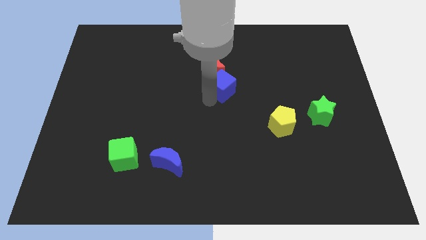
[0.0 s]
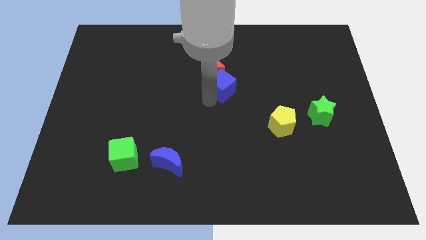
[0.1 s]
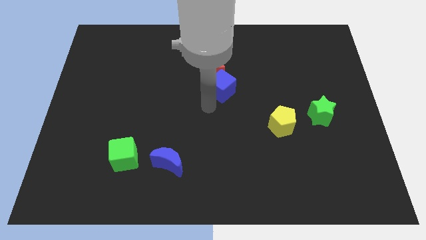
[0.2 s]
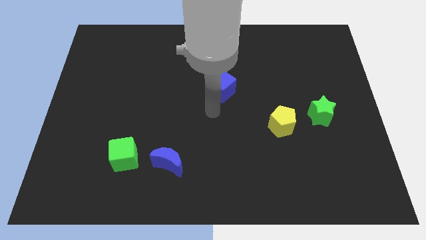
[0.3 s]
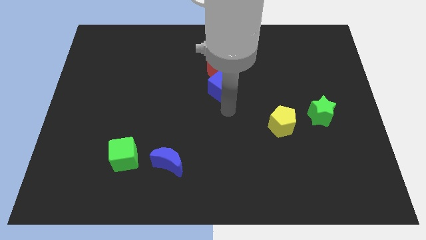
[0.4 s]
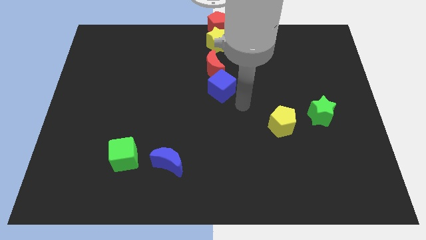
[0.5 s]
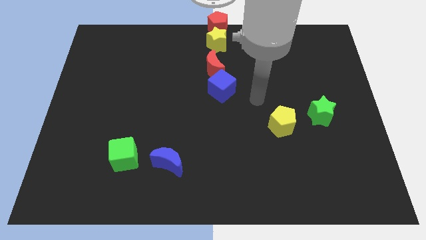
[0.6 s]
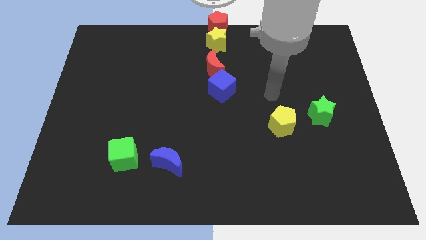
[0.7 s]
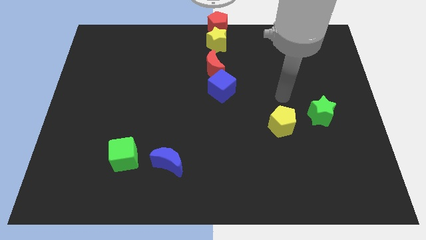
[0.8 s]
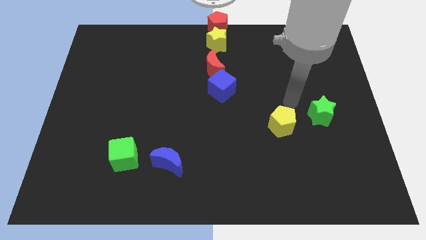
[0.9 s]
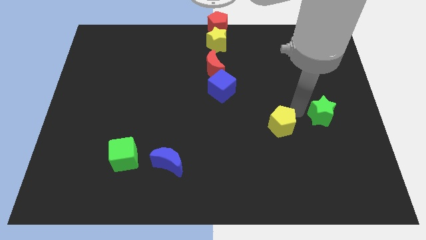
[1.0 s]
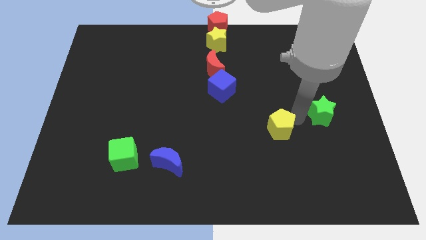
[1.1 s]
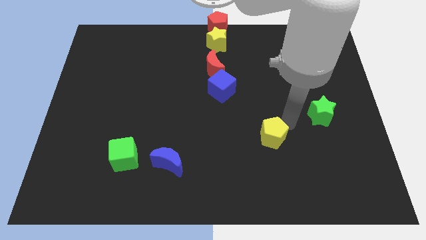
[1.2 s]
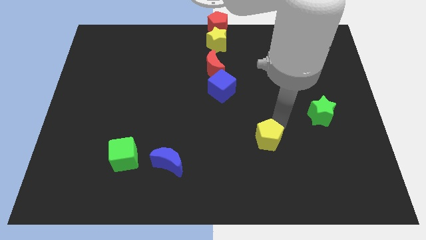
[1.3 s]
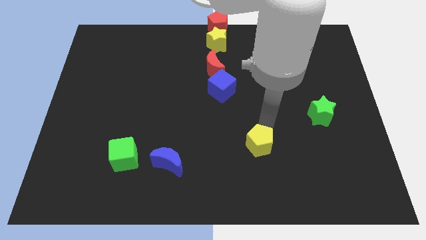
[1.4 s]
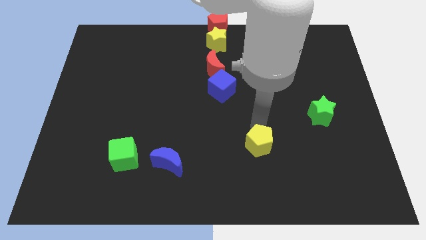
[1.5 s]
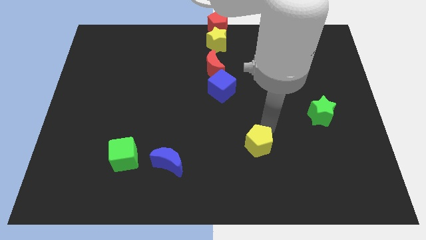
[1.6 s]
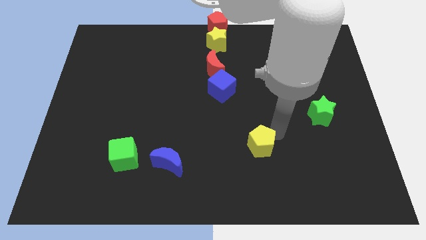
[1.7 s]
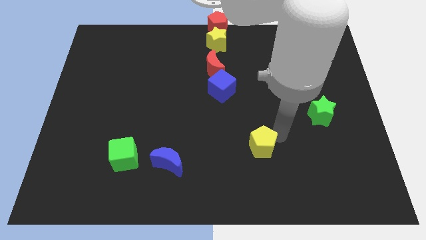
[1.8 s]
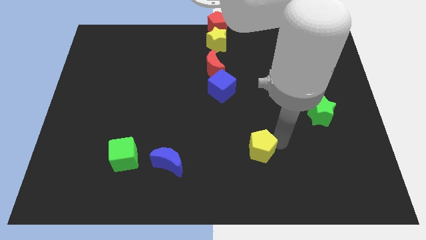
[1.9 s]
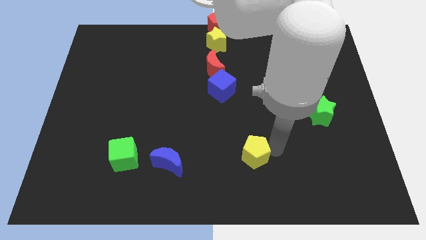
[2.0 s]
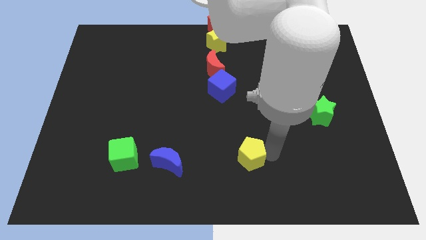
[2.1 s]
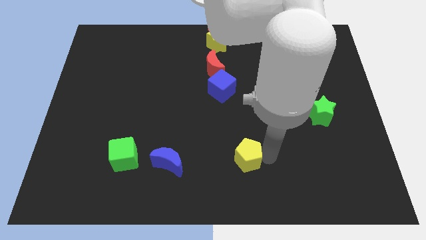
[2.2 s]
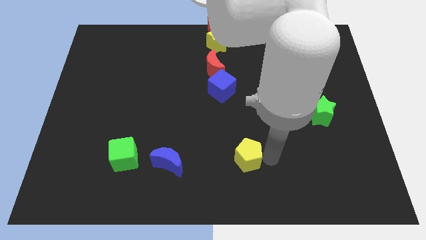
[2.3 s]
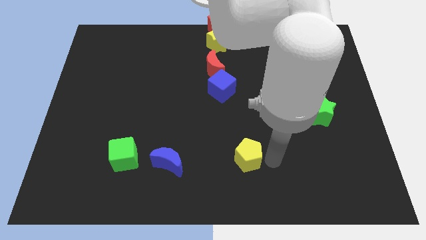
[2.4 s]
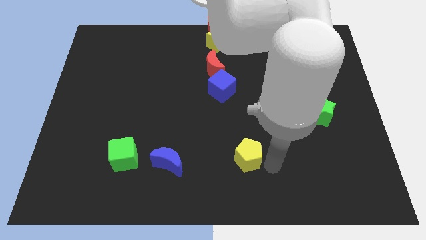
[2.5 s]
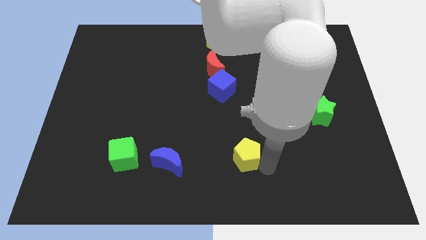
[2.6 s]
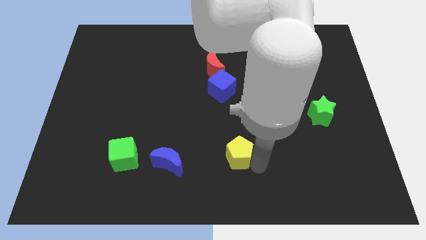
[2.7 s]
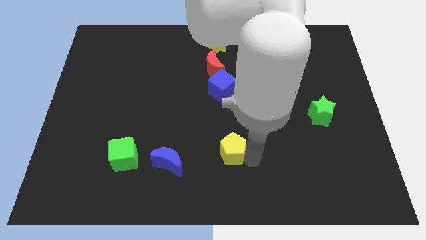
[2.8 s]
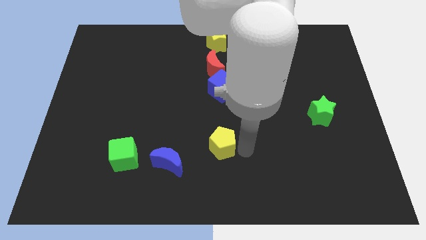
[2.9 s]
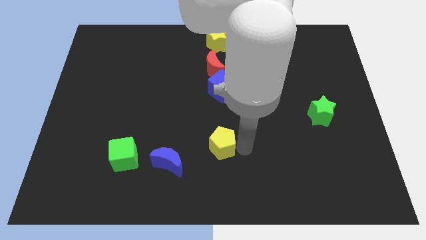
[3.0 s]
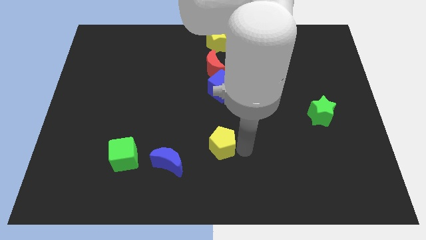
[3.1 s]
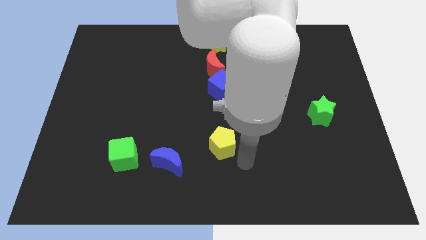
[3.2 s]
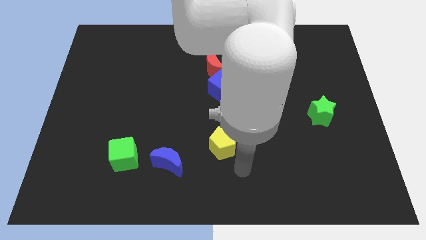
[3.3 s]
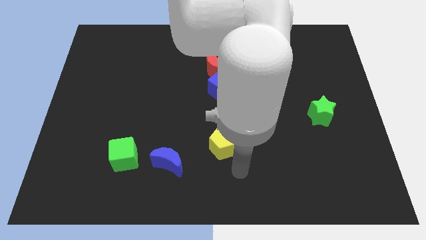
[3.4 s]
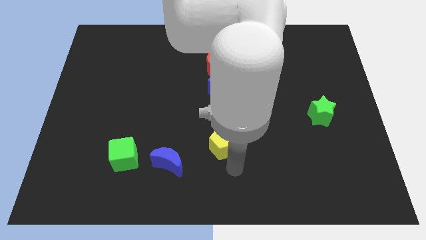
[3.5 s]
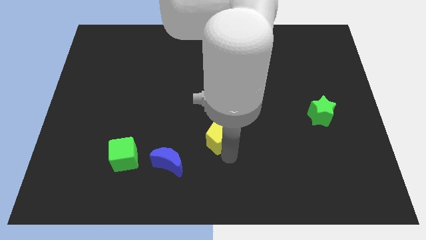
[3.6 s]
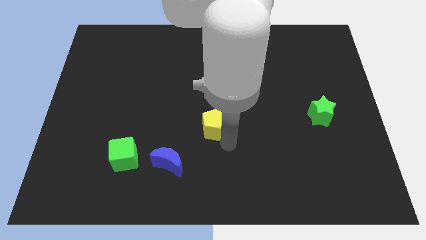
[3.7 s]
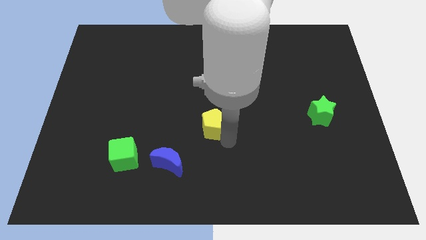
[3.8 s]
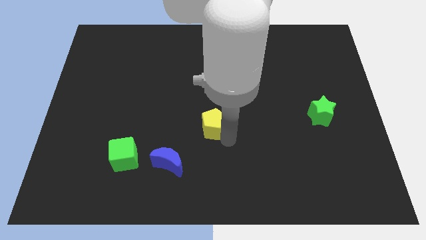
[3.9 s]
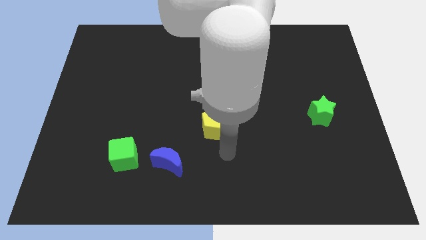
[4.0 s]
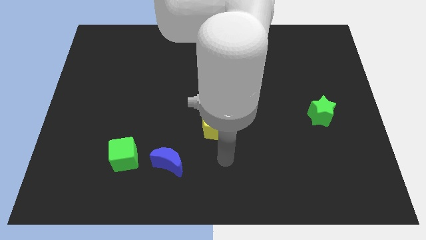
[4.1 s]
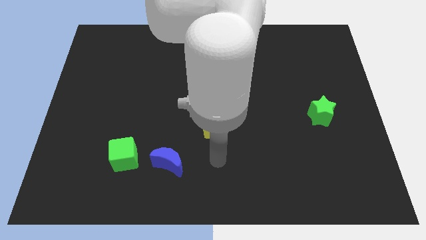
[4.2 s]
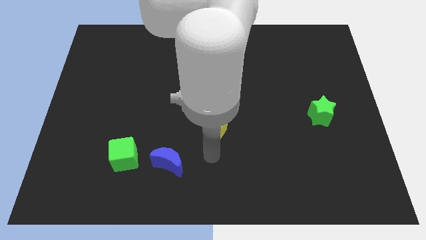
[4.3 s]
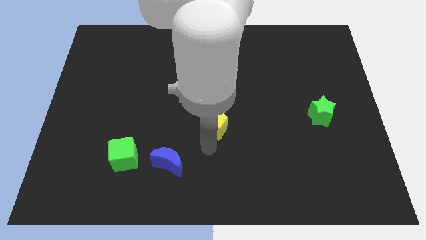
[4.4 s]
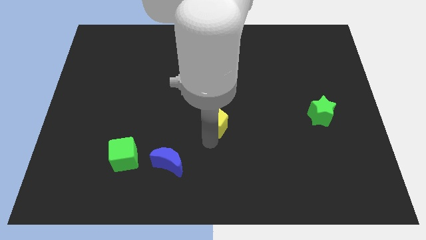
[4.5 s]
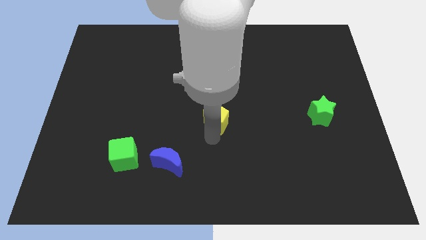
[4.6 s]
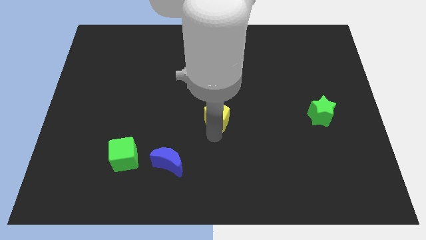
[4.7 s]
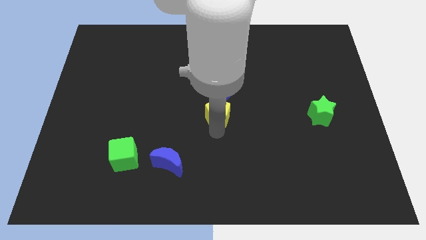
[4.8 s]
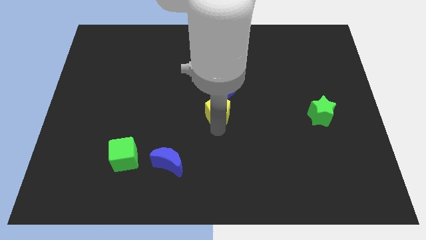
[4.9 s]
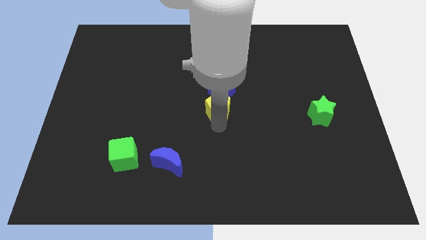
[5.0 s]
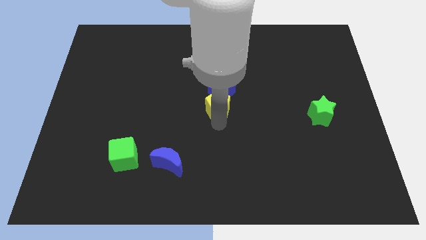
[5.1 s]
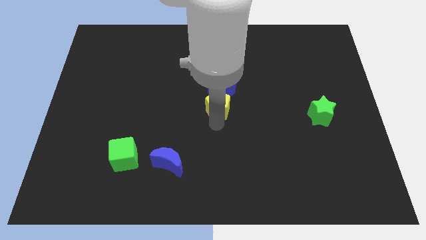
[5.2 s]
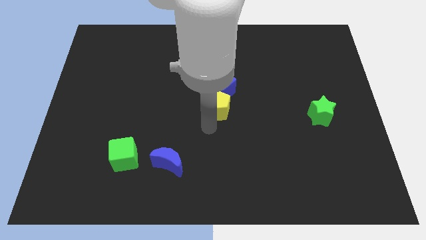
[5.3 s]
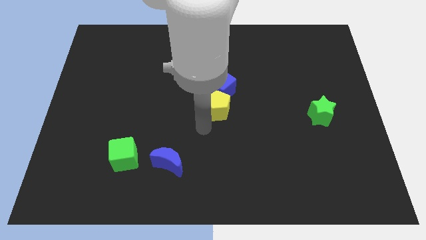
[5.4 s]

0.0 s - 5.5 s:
move the yellow pentagon below the blue cube

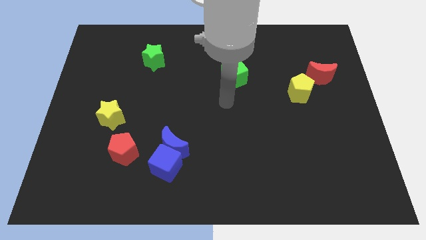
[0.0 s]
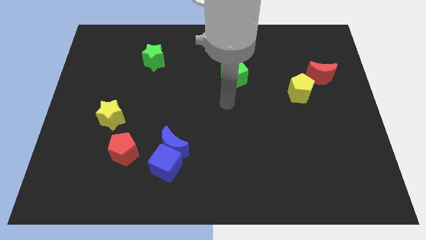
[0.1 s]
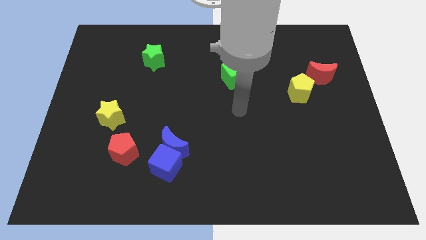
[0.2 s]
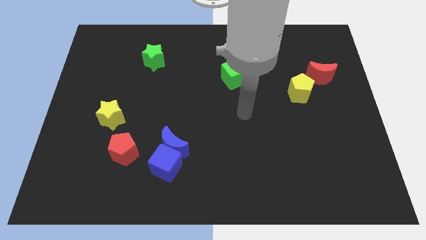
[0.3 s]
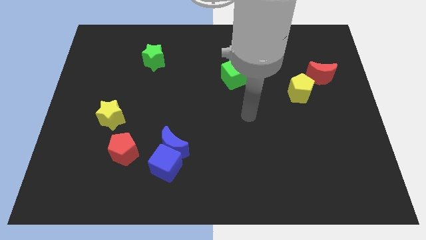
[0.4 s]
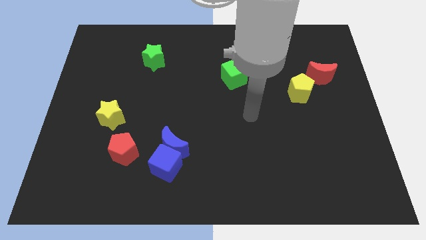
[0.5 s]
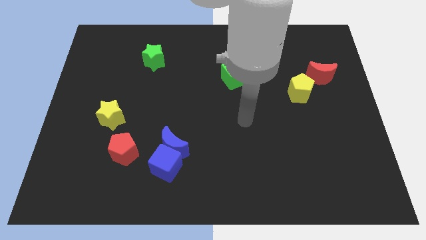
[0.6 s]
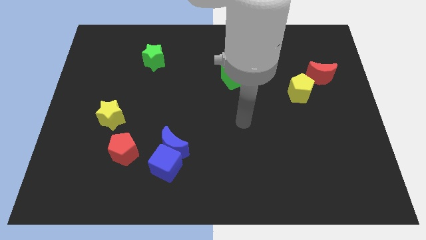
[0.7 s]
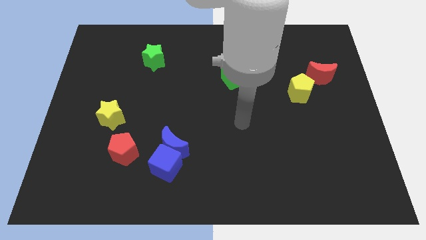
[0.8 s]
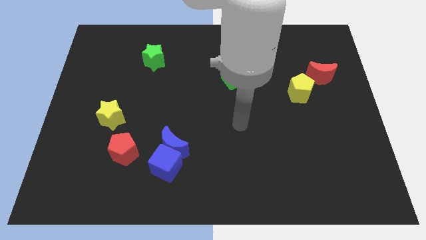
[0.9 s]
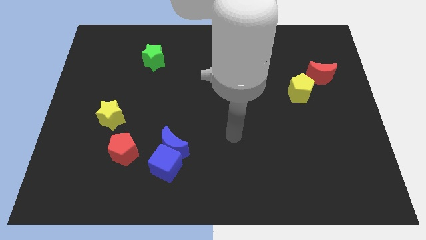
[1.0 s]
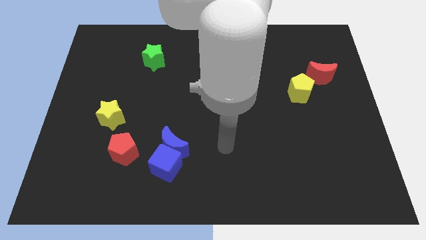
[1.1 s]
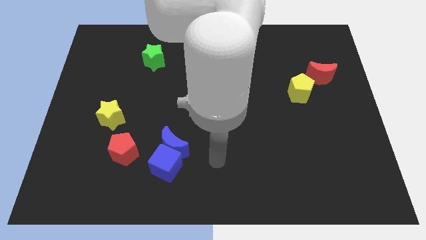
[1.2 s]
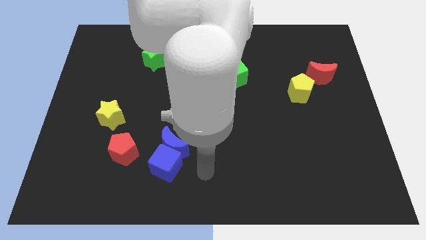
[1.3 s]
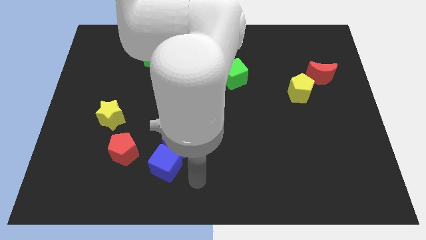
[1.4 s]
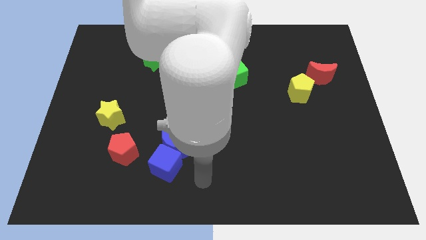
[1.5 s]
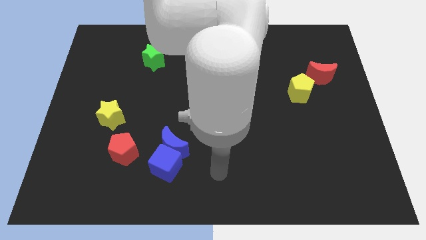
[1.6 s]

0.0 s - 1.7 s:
move your arm to the right side of the blue cube

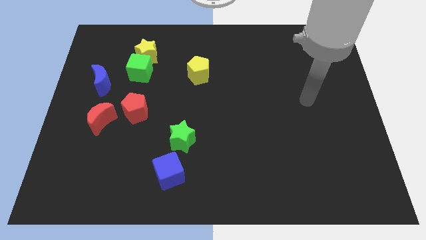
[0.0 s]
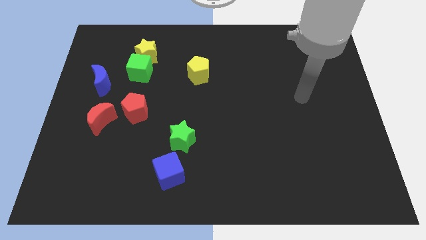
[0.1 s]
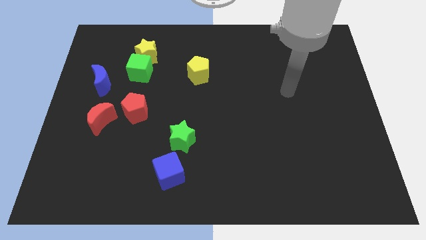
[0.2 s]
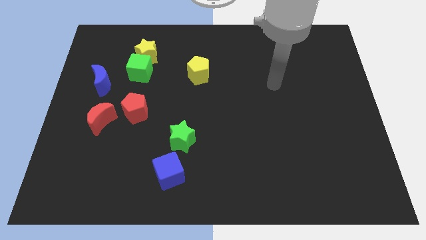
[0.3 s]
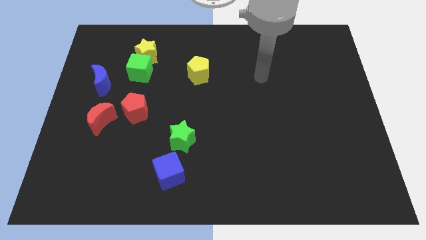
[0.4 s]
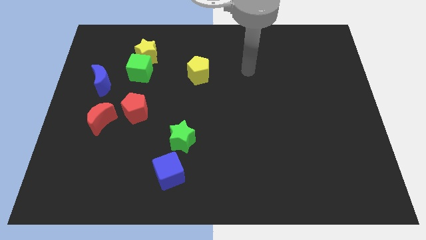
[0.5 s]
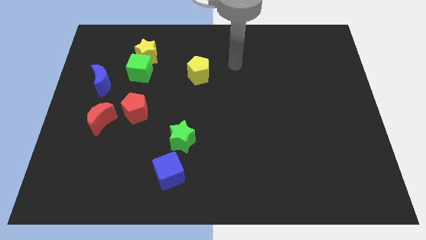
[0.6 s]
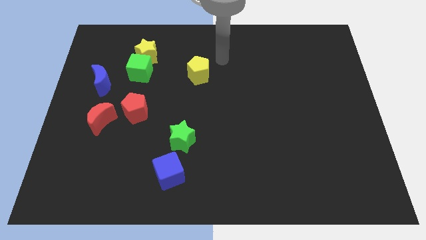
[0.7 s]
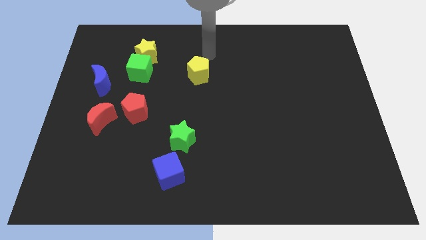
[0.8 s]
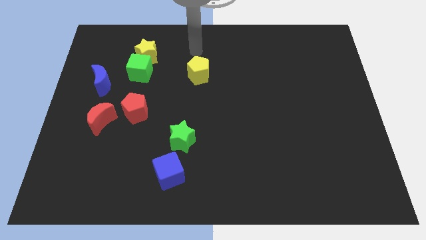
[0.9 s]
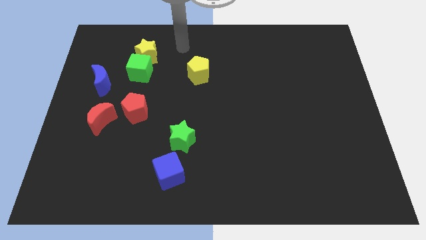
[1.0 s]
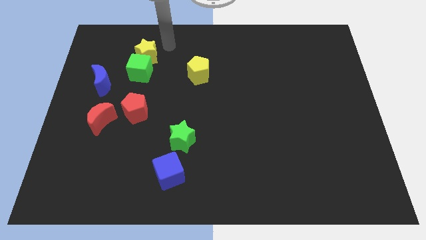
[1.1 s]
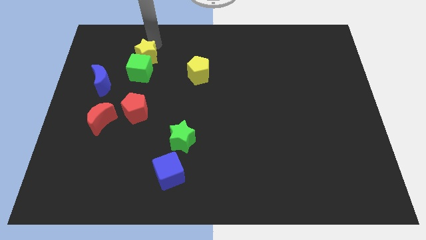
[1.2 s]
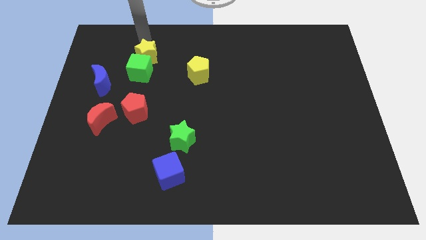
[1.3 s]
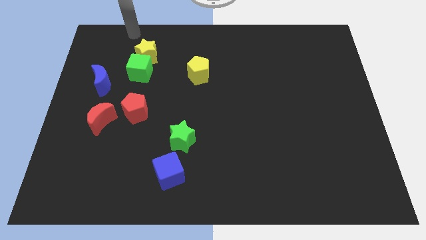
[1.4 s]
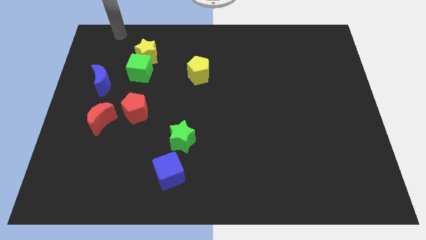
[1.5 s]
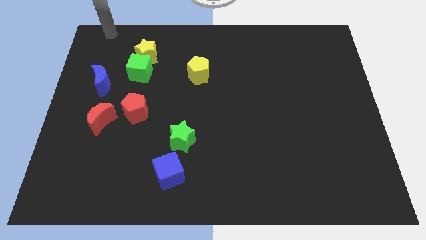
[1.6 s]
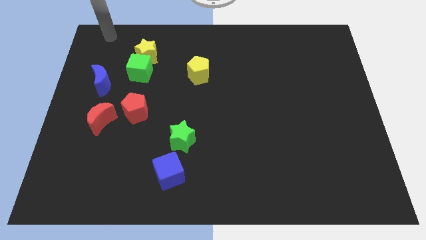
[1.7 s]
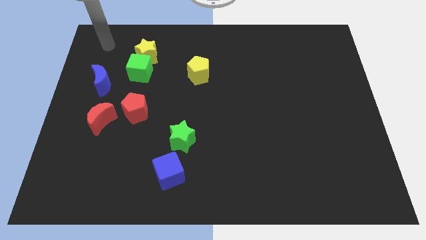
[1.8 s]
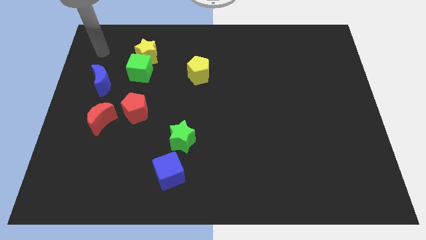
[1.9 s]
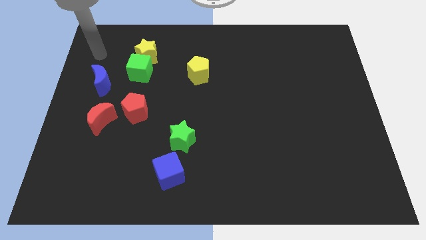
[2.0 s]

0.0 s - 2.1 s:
move your arm to the left of the yellow star
